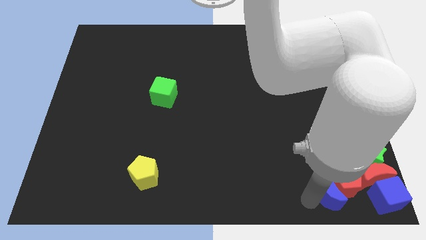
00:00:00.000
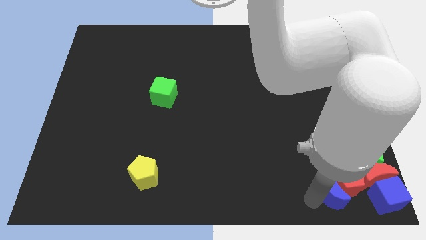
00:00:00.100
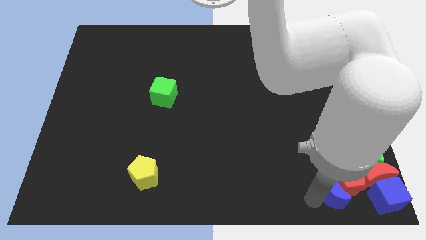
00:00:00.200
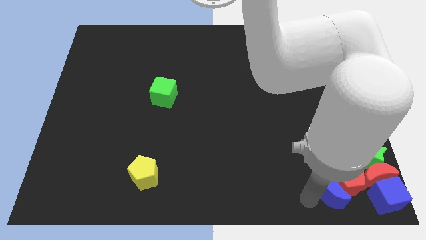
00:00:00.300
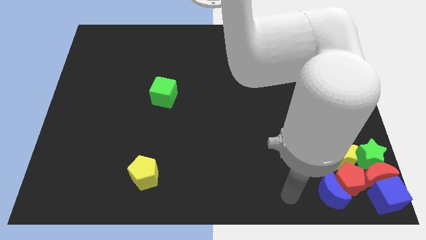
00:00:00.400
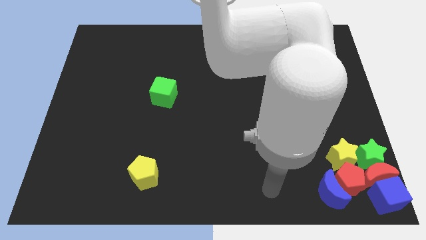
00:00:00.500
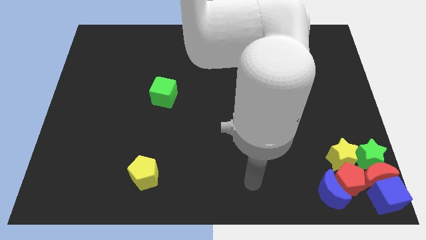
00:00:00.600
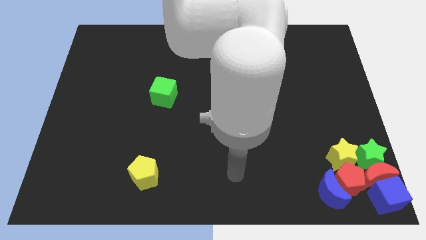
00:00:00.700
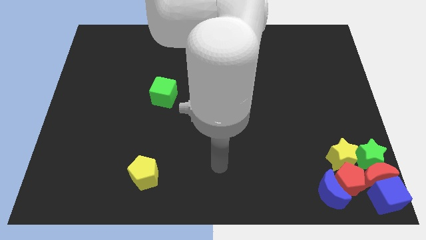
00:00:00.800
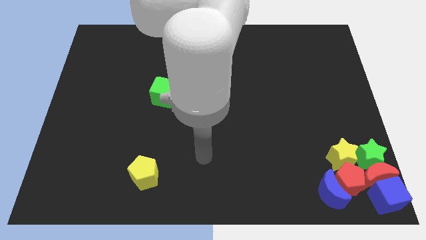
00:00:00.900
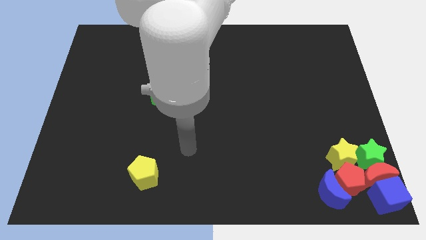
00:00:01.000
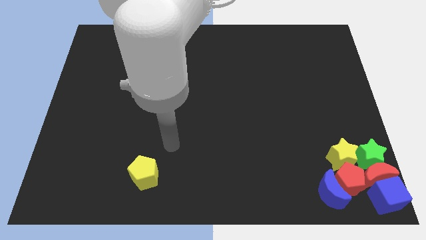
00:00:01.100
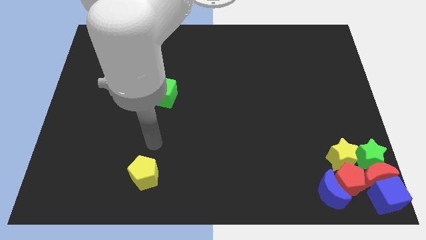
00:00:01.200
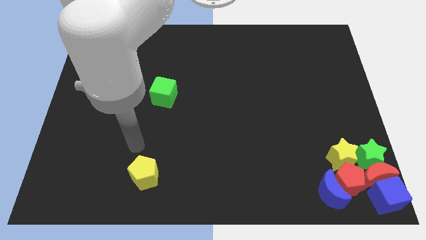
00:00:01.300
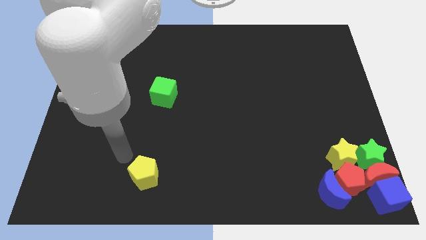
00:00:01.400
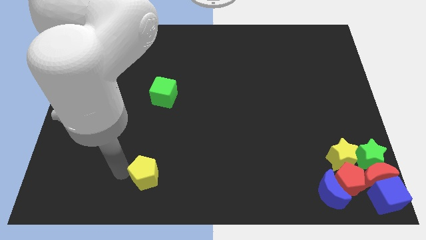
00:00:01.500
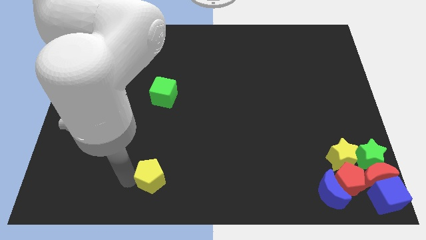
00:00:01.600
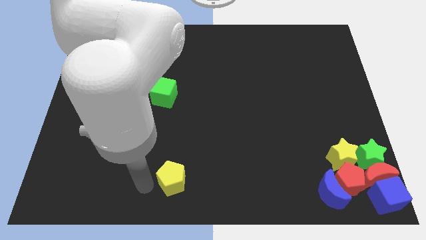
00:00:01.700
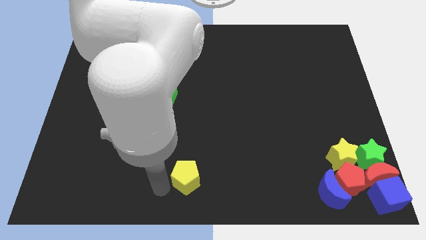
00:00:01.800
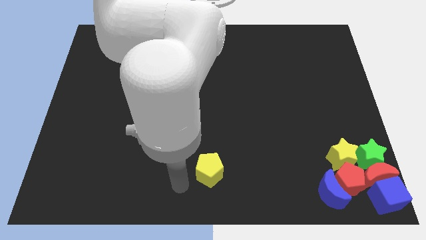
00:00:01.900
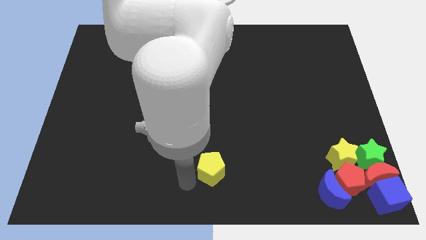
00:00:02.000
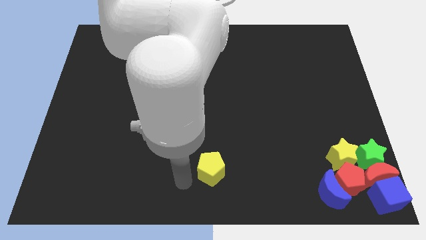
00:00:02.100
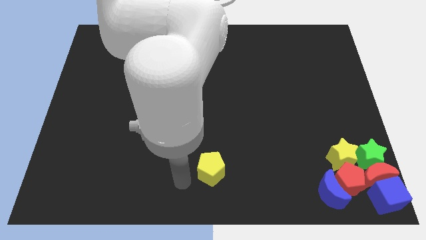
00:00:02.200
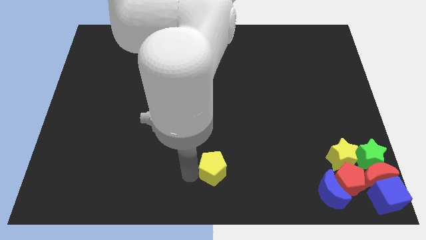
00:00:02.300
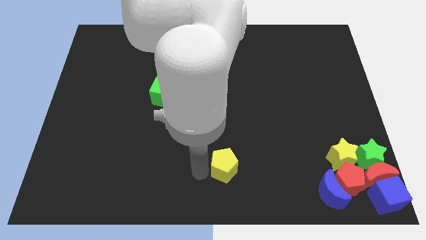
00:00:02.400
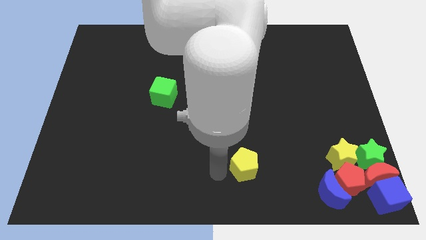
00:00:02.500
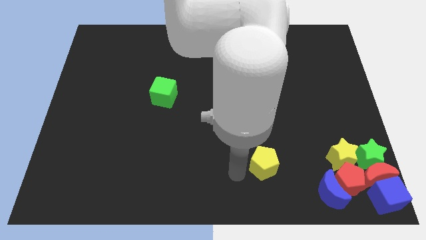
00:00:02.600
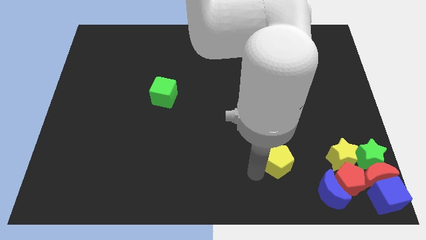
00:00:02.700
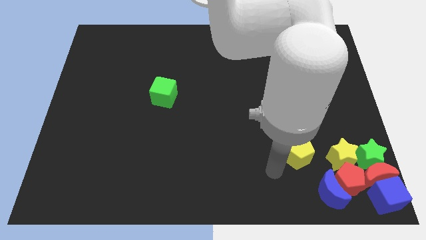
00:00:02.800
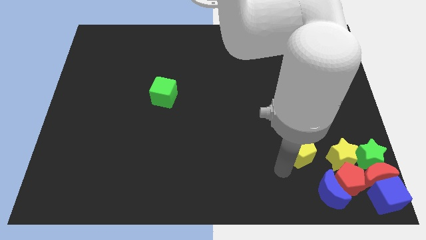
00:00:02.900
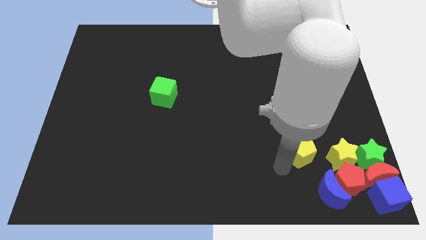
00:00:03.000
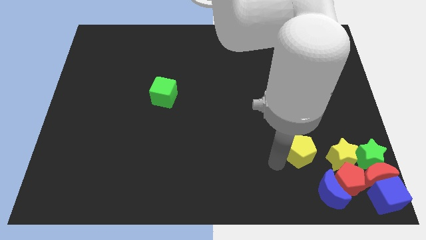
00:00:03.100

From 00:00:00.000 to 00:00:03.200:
move the yellow pentagon left side of the yellow star

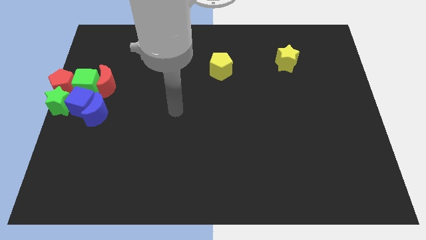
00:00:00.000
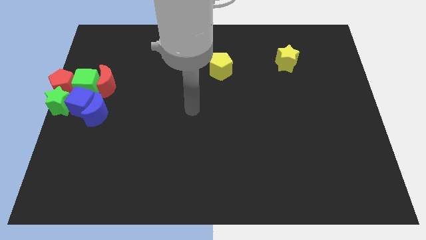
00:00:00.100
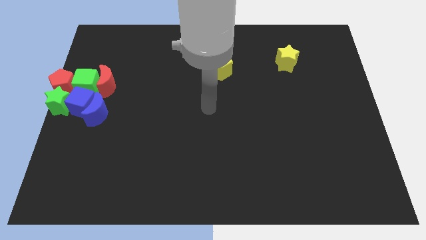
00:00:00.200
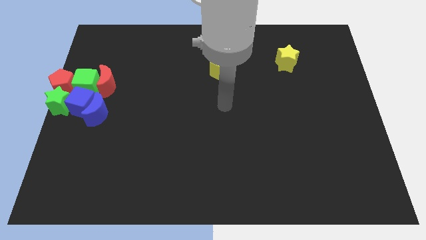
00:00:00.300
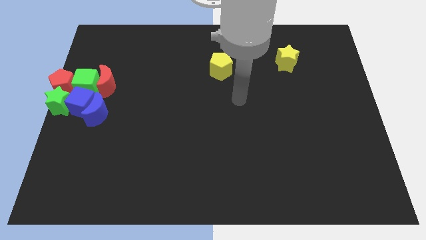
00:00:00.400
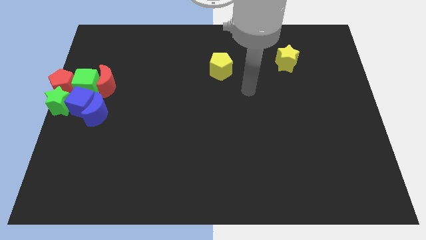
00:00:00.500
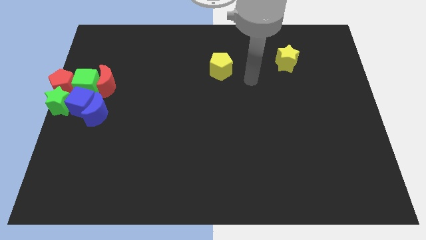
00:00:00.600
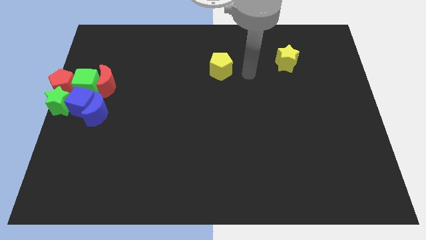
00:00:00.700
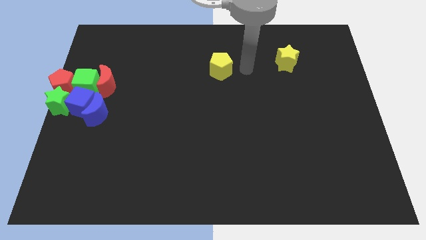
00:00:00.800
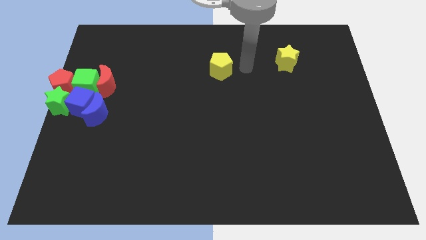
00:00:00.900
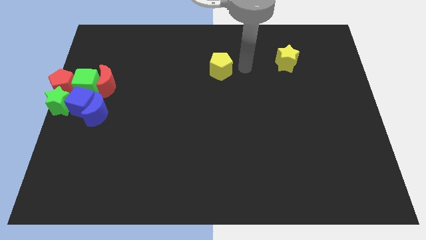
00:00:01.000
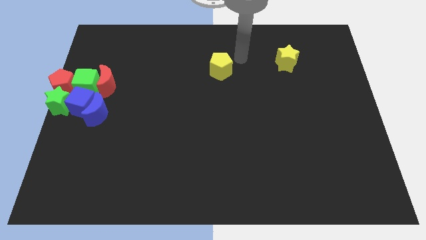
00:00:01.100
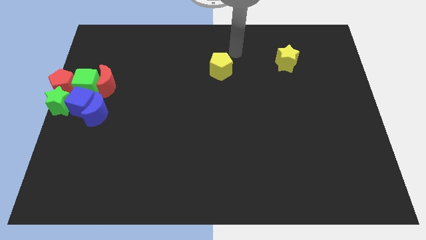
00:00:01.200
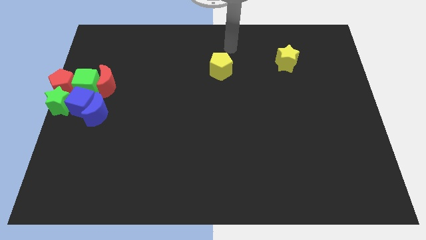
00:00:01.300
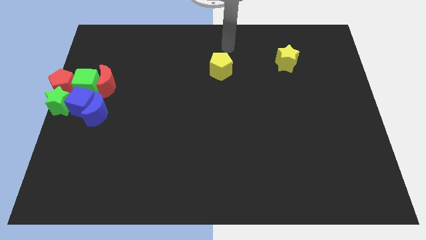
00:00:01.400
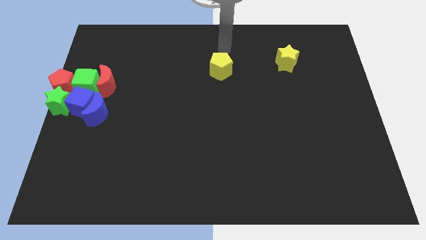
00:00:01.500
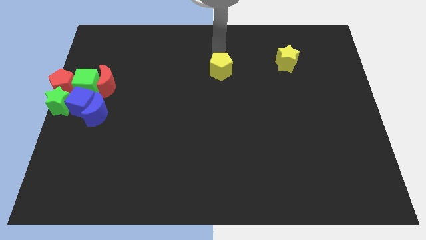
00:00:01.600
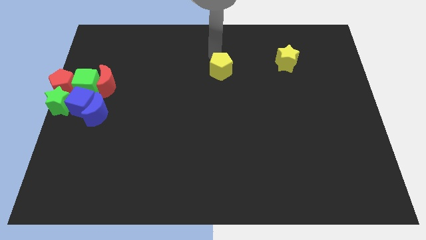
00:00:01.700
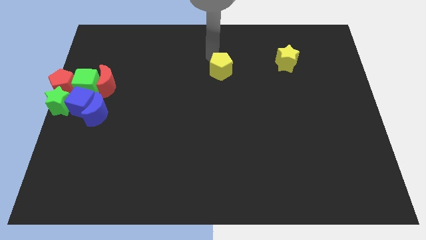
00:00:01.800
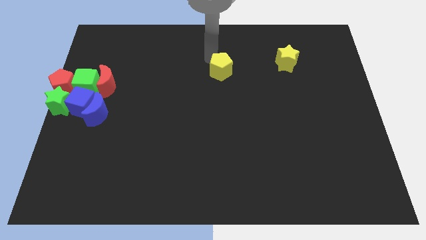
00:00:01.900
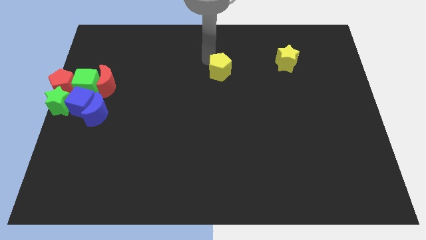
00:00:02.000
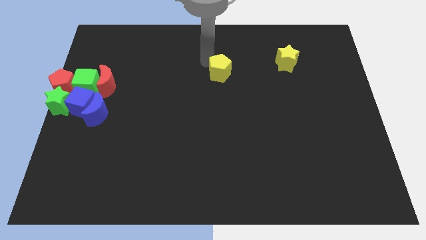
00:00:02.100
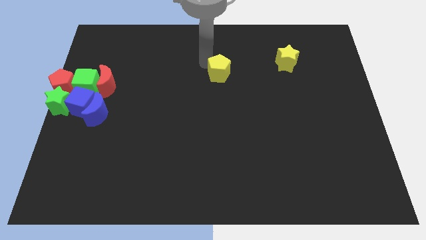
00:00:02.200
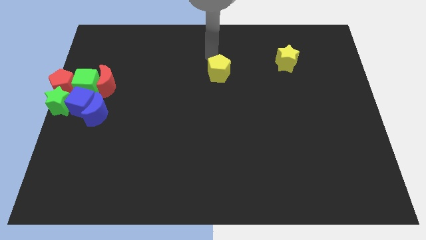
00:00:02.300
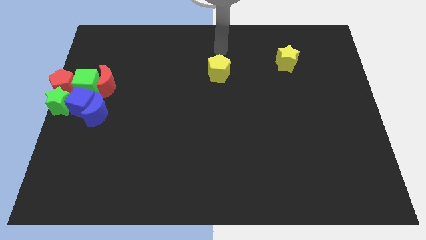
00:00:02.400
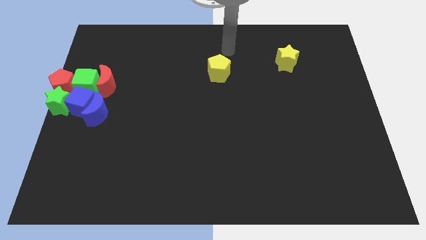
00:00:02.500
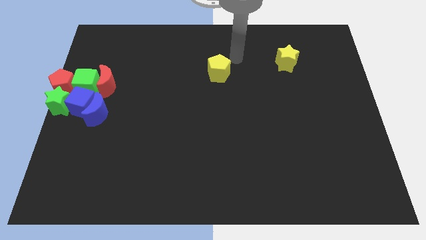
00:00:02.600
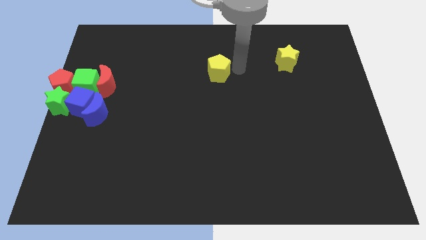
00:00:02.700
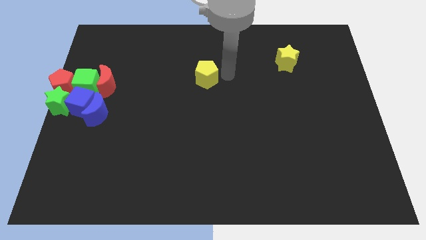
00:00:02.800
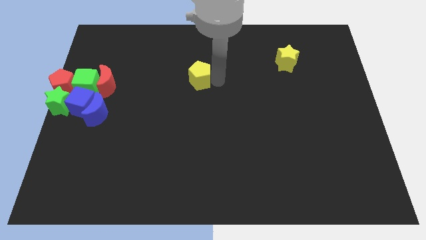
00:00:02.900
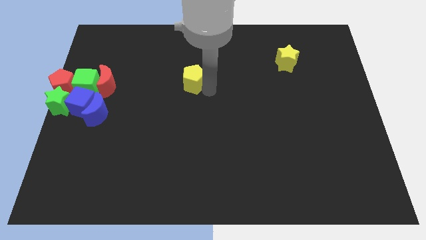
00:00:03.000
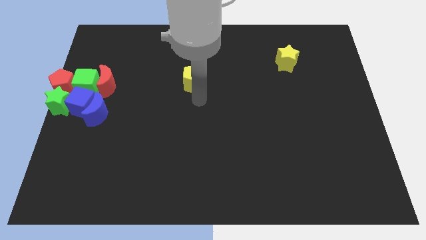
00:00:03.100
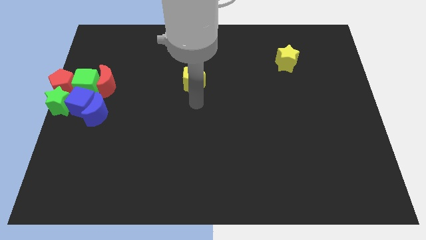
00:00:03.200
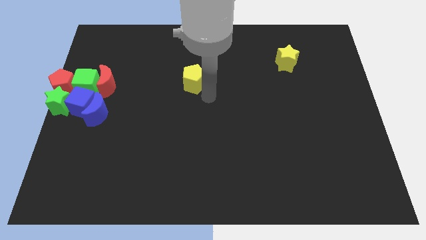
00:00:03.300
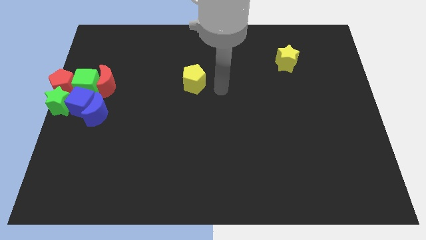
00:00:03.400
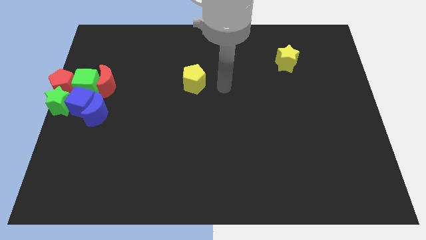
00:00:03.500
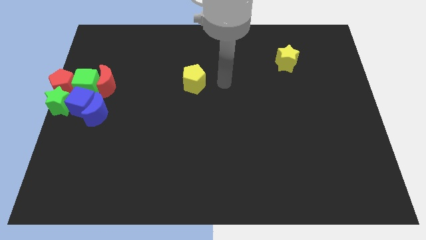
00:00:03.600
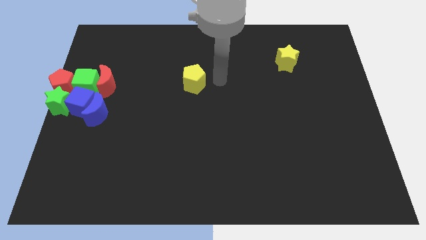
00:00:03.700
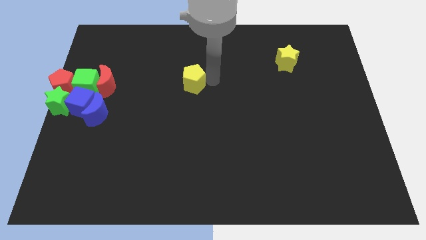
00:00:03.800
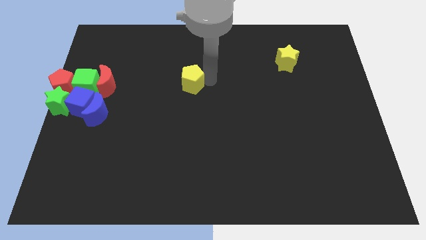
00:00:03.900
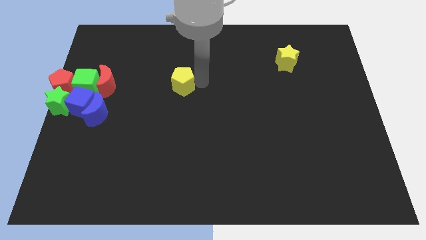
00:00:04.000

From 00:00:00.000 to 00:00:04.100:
drag the yellow pentagon to the left side of the board

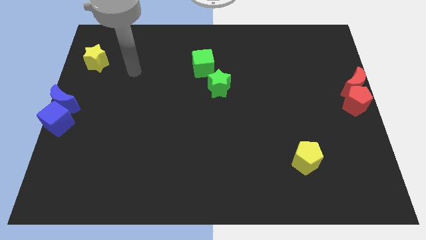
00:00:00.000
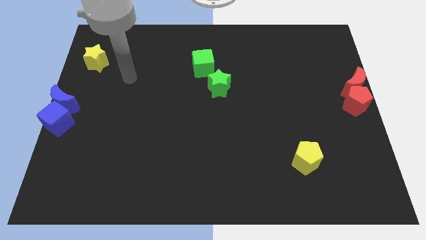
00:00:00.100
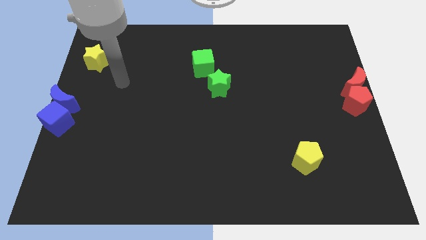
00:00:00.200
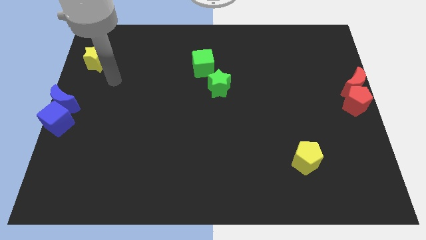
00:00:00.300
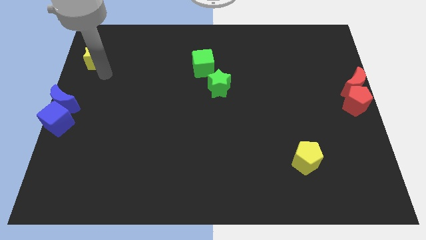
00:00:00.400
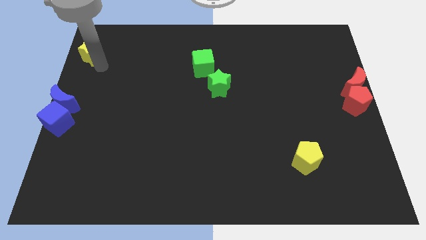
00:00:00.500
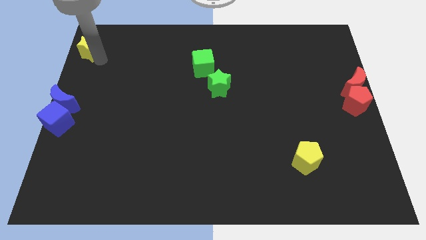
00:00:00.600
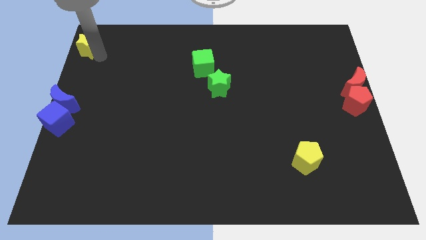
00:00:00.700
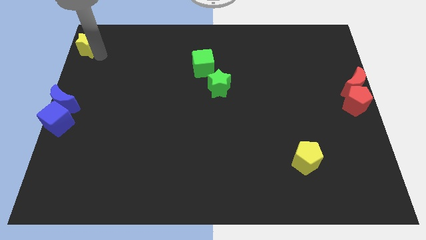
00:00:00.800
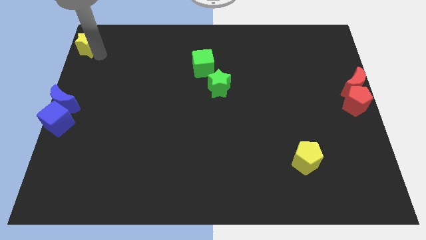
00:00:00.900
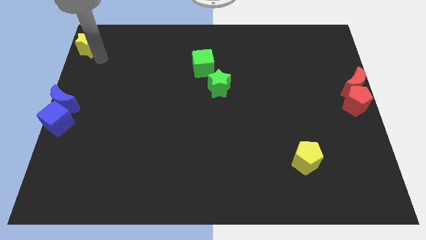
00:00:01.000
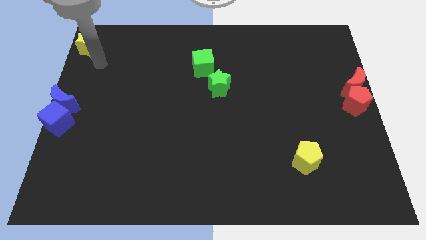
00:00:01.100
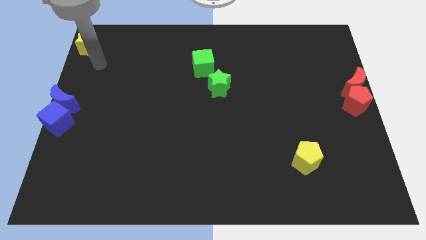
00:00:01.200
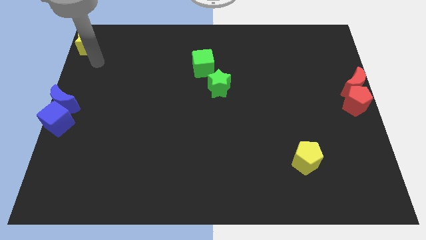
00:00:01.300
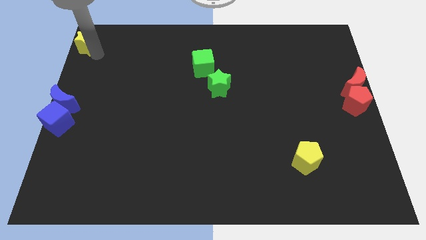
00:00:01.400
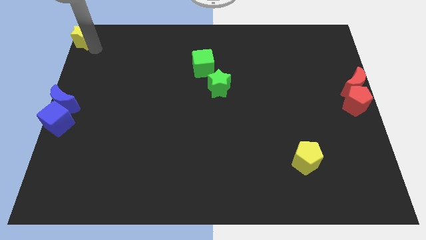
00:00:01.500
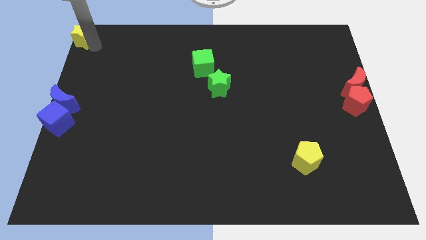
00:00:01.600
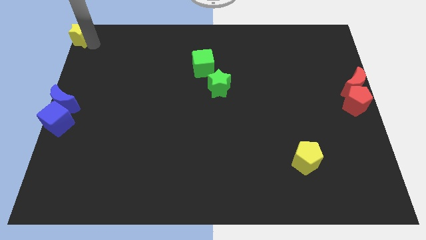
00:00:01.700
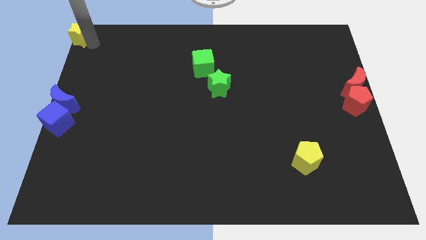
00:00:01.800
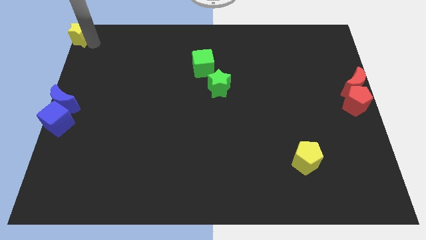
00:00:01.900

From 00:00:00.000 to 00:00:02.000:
push the yellow star to the top left corner of the board
